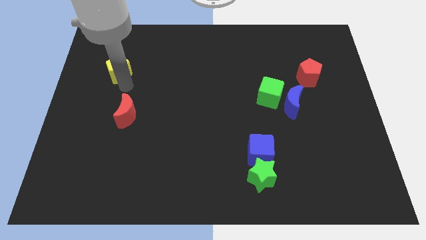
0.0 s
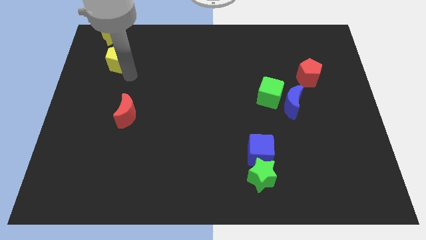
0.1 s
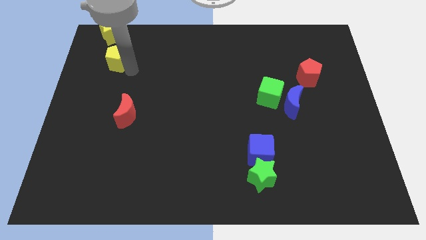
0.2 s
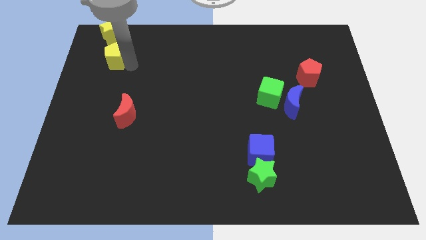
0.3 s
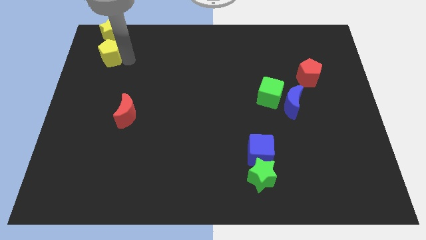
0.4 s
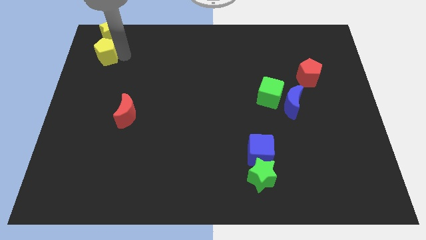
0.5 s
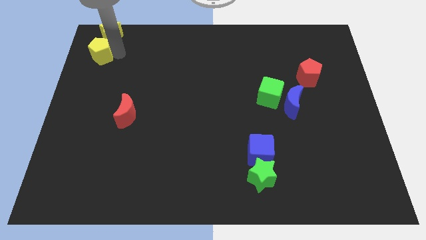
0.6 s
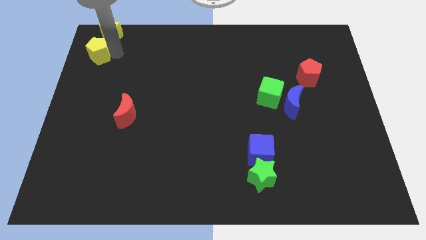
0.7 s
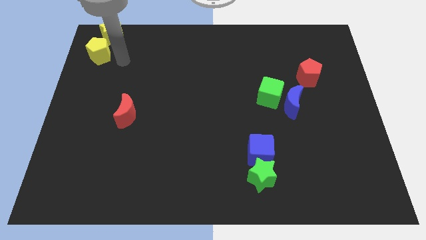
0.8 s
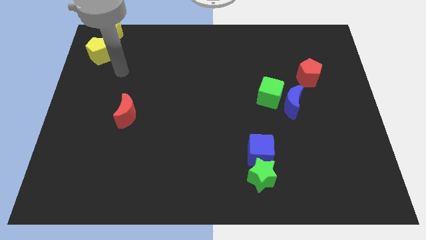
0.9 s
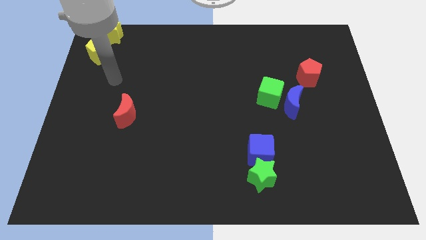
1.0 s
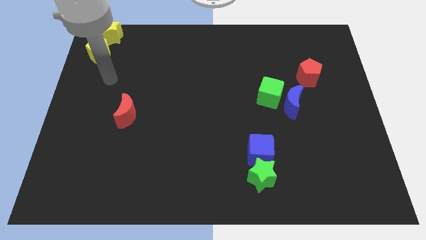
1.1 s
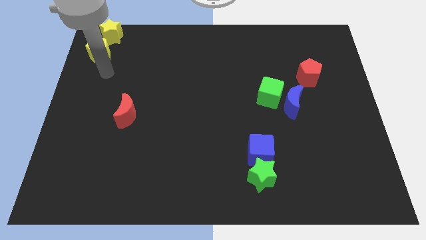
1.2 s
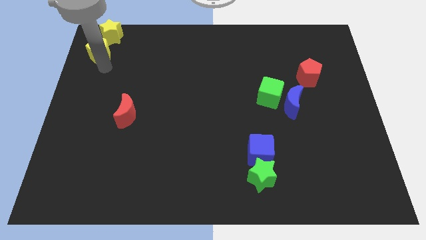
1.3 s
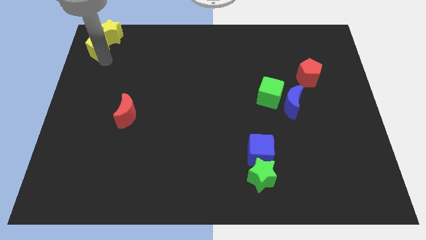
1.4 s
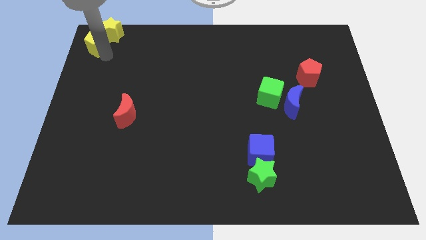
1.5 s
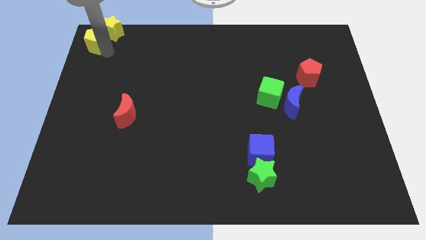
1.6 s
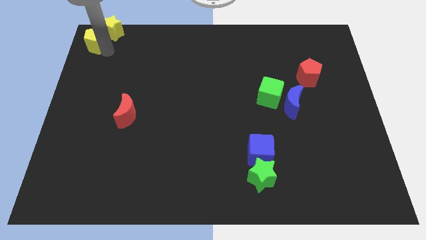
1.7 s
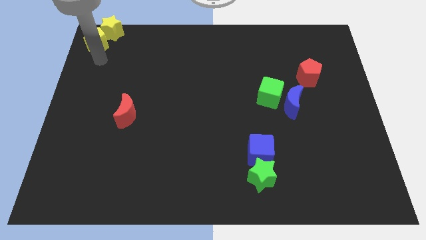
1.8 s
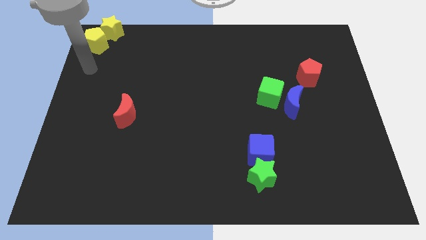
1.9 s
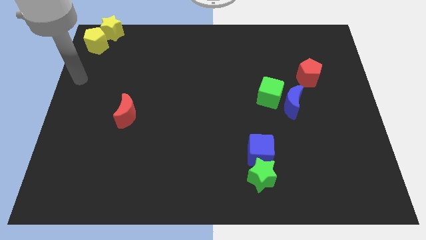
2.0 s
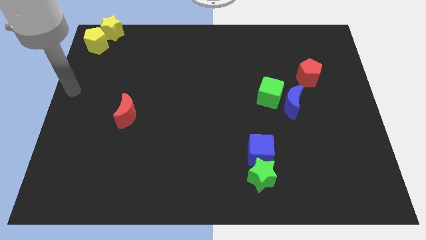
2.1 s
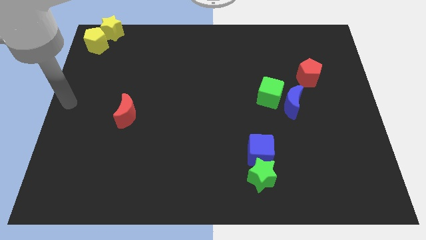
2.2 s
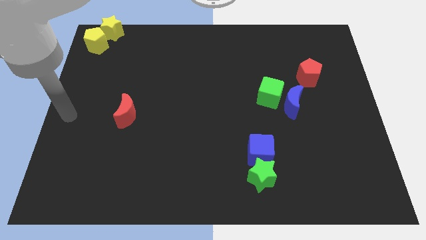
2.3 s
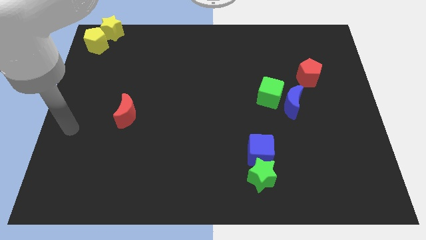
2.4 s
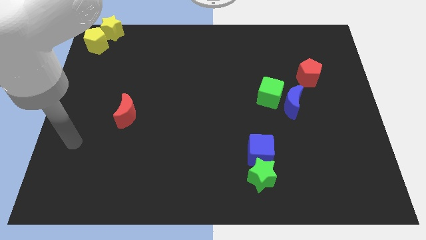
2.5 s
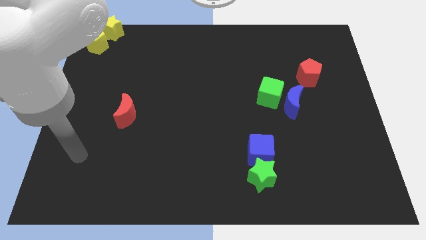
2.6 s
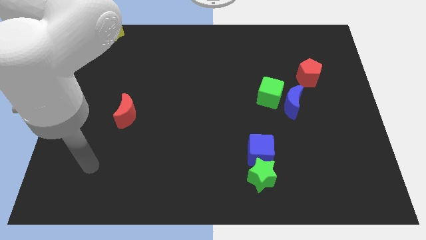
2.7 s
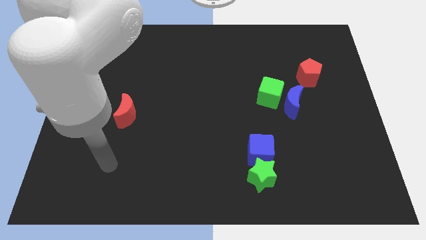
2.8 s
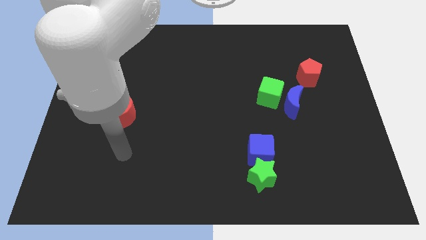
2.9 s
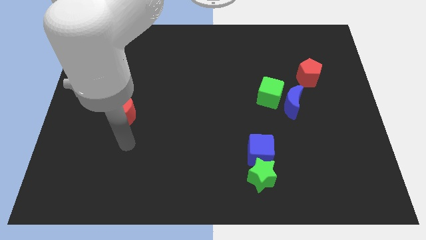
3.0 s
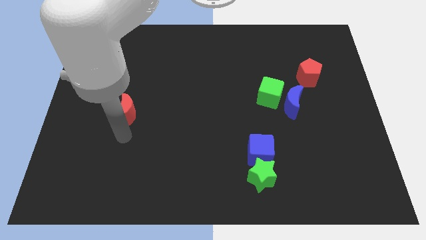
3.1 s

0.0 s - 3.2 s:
move the yellow pentagon into the yellow star

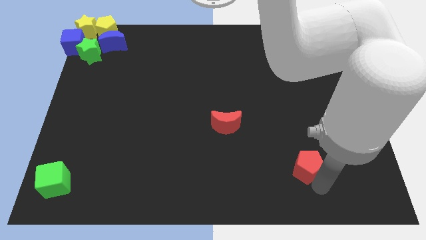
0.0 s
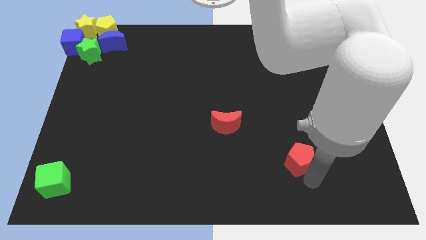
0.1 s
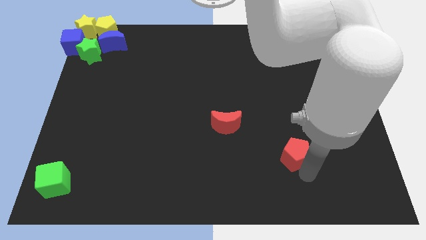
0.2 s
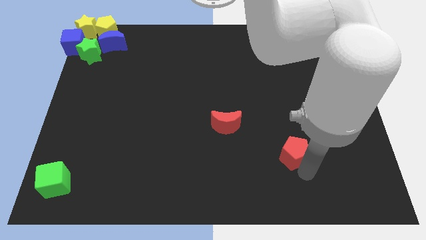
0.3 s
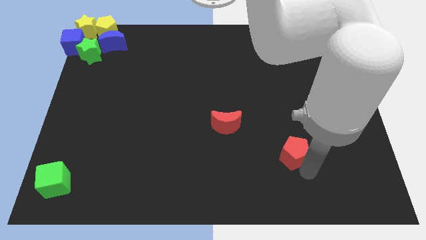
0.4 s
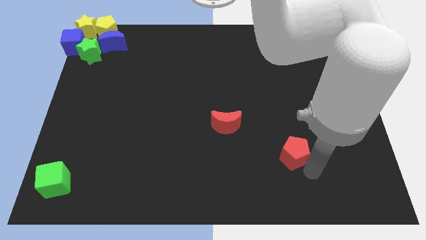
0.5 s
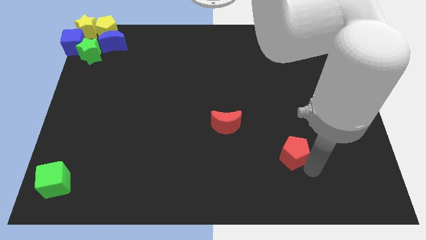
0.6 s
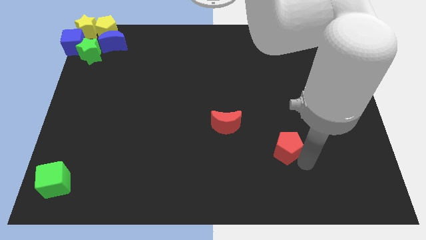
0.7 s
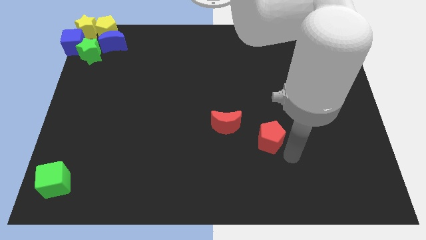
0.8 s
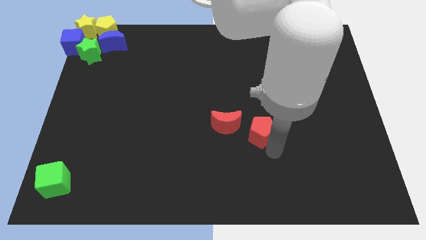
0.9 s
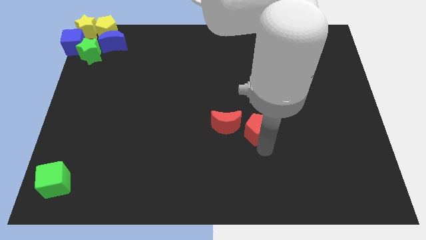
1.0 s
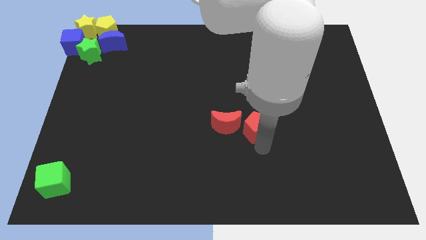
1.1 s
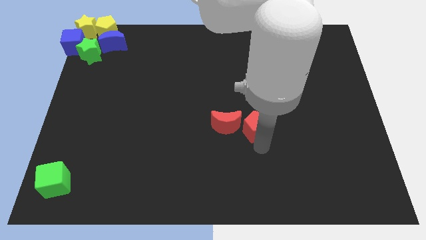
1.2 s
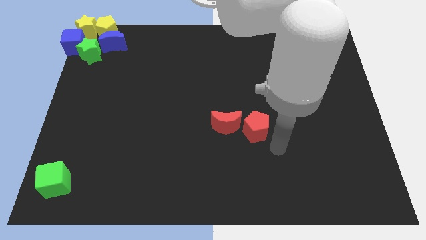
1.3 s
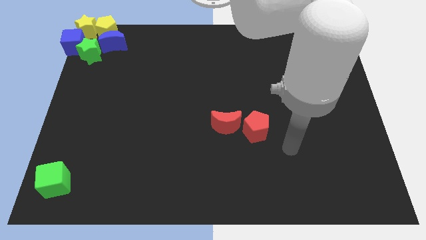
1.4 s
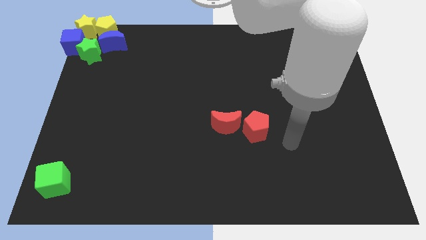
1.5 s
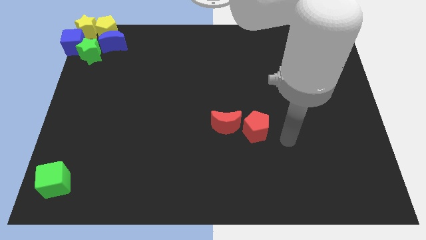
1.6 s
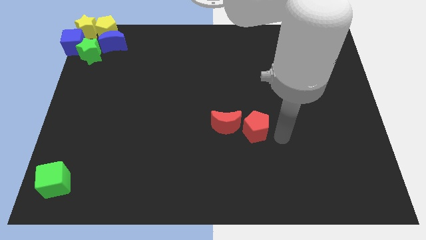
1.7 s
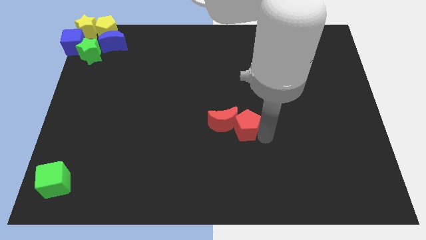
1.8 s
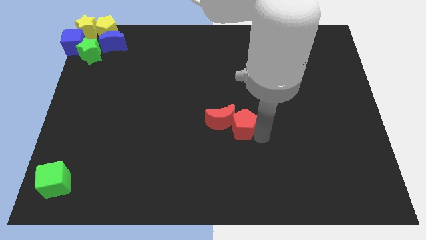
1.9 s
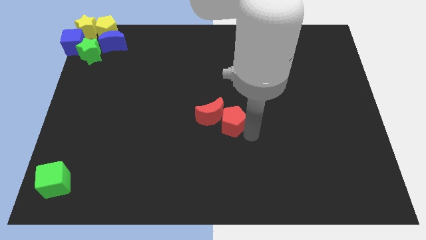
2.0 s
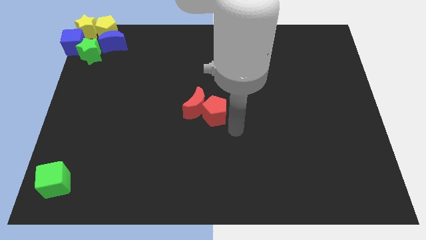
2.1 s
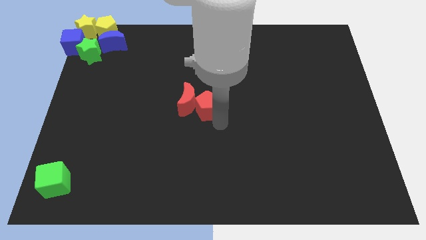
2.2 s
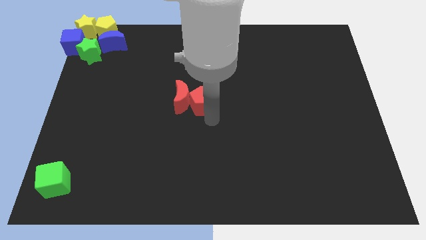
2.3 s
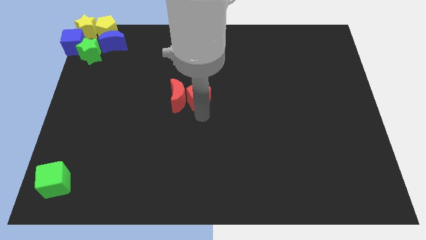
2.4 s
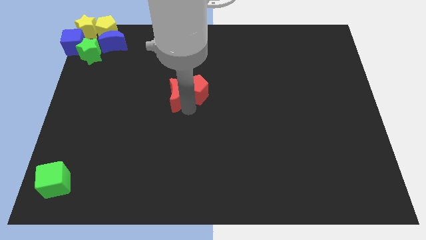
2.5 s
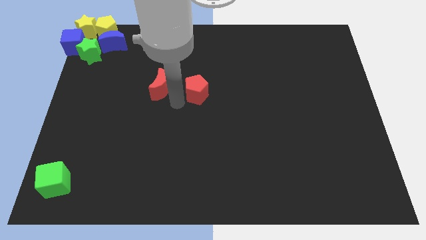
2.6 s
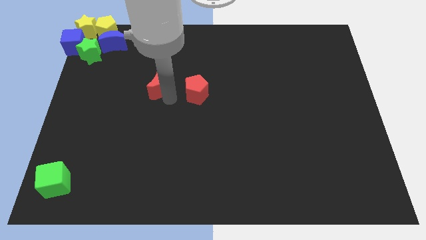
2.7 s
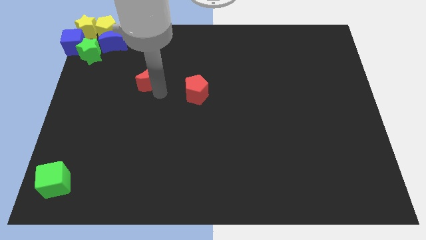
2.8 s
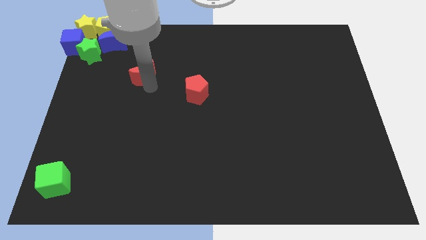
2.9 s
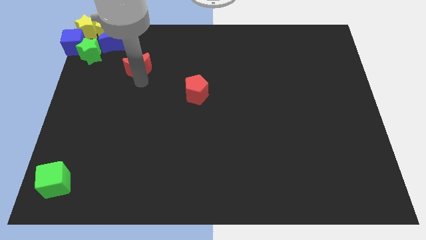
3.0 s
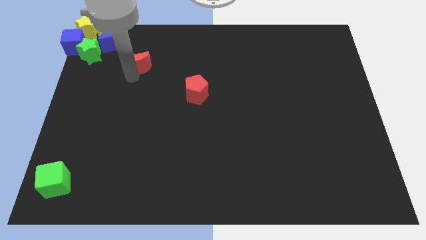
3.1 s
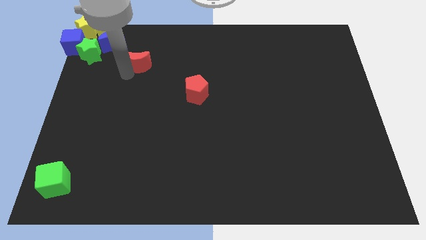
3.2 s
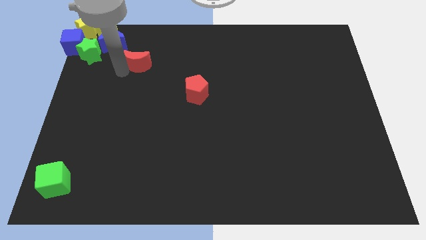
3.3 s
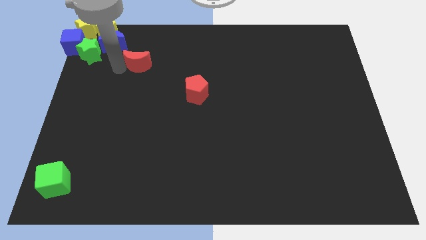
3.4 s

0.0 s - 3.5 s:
push the red pentagon to the center of the board

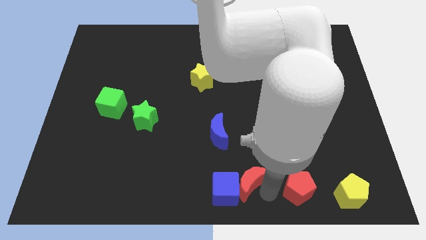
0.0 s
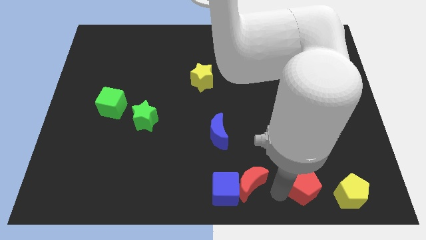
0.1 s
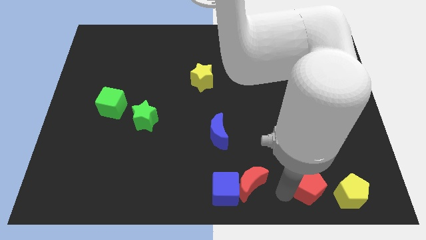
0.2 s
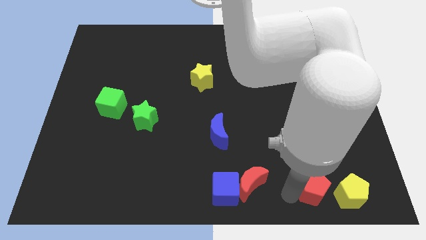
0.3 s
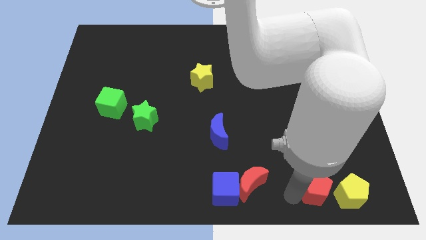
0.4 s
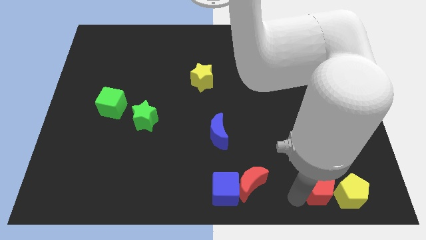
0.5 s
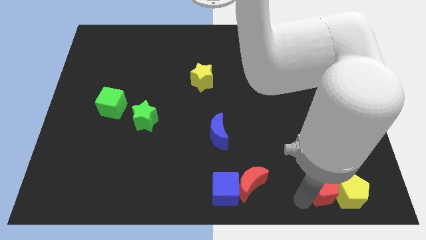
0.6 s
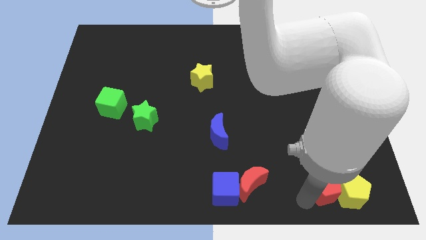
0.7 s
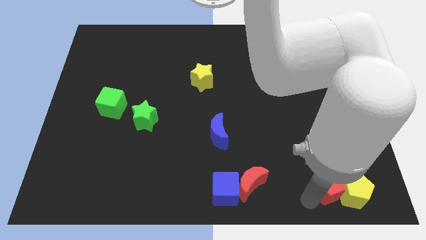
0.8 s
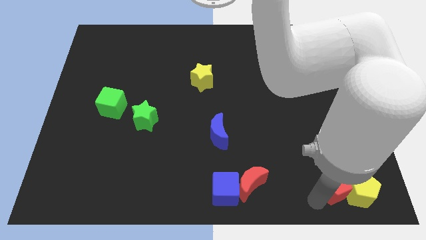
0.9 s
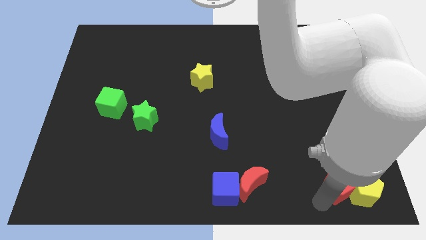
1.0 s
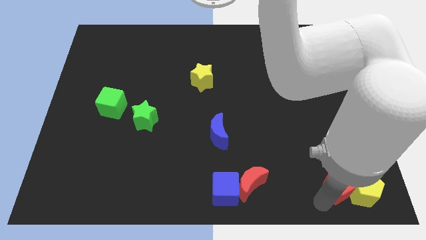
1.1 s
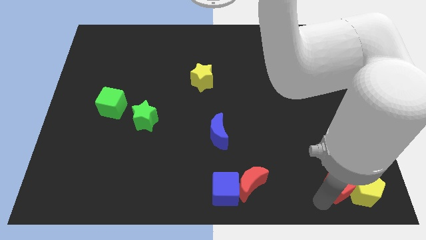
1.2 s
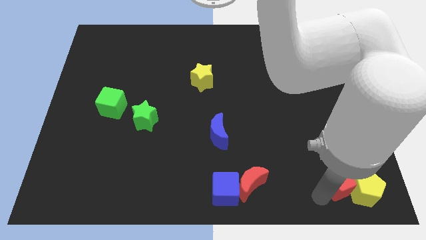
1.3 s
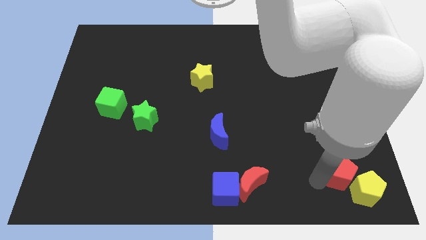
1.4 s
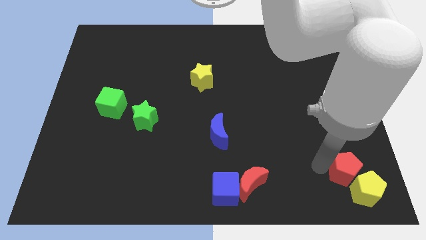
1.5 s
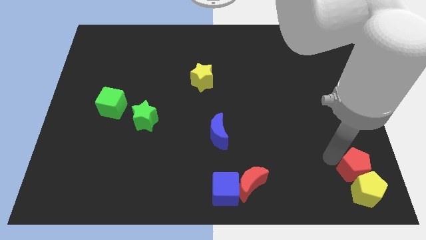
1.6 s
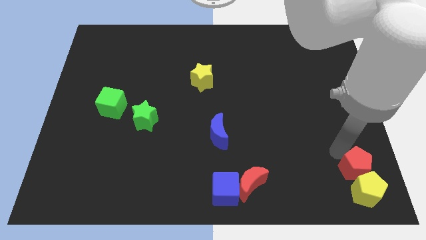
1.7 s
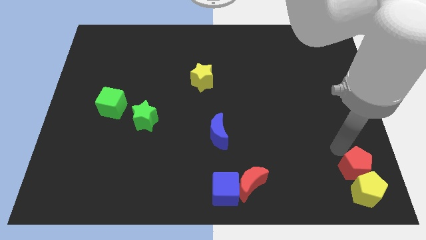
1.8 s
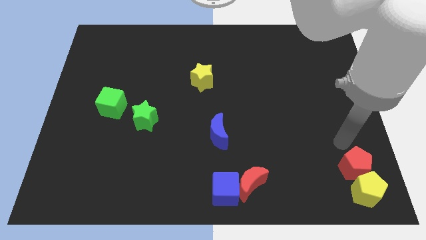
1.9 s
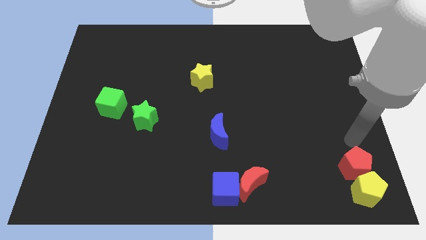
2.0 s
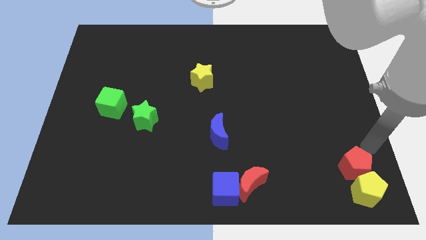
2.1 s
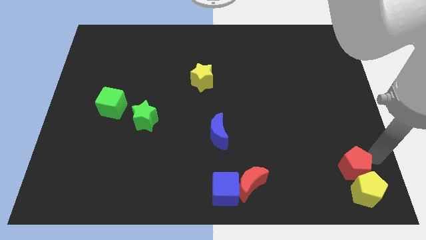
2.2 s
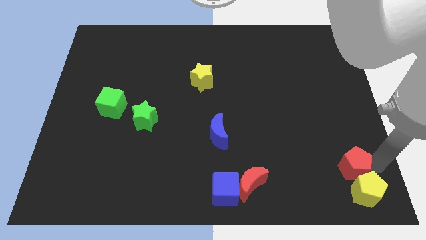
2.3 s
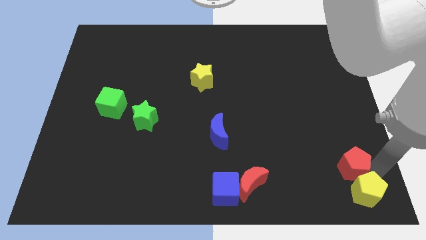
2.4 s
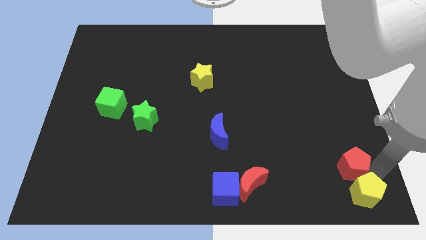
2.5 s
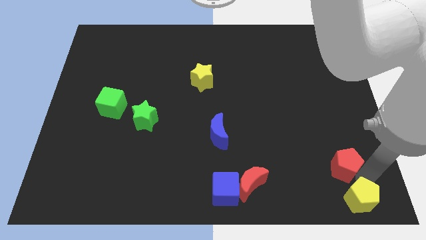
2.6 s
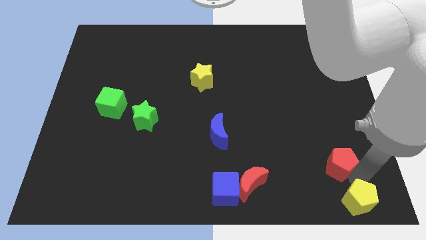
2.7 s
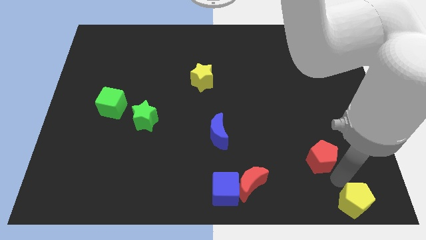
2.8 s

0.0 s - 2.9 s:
push the red pentagon to the top of the yellow pentagon
